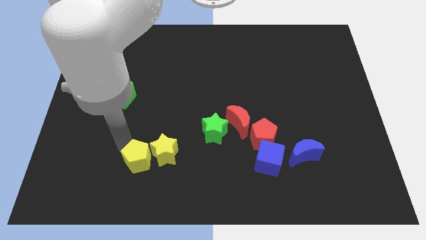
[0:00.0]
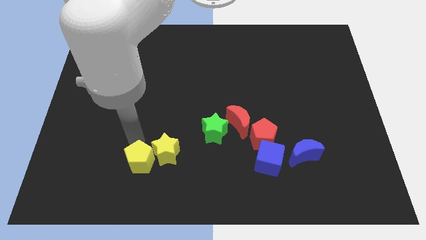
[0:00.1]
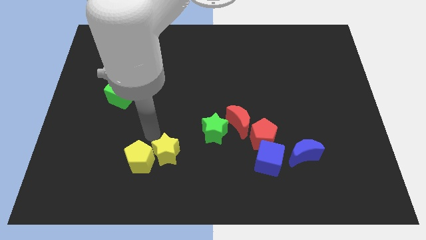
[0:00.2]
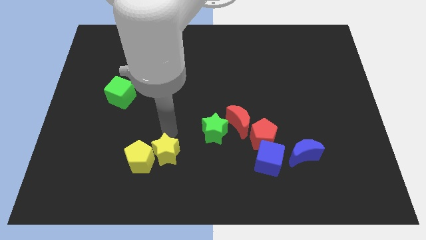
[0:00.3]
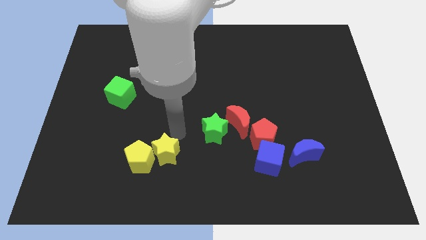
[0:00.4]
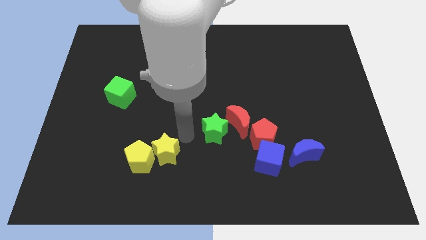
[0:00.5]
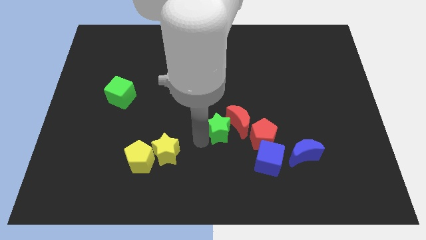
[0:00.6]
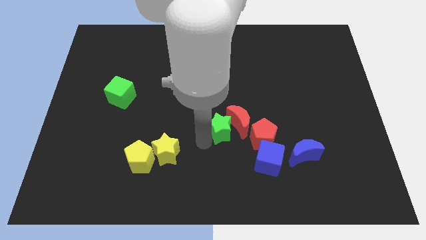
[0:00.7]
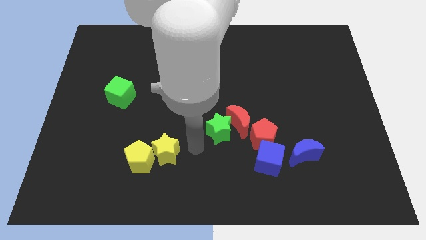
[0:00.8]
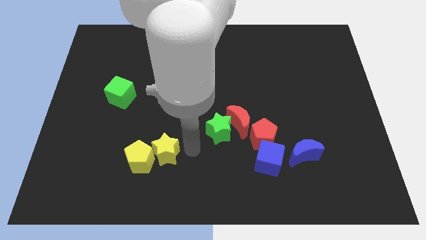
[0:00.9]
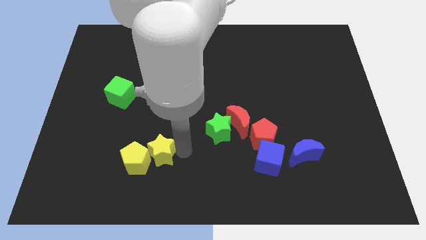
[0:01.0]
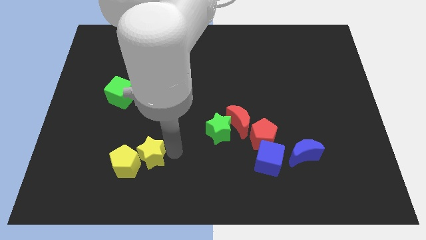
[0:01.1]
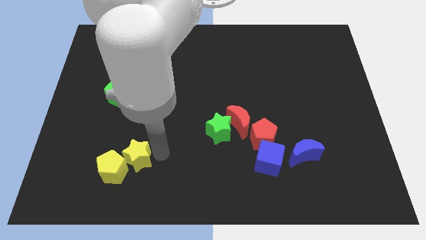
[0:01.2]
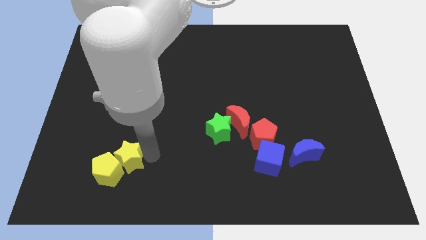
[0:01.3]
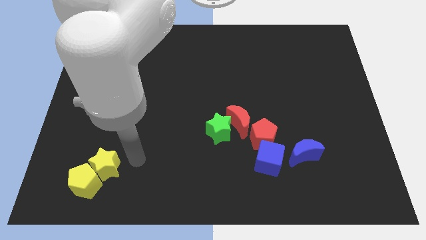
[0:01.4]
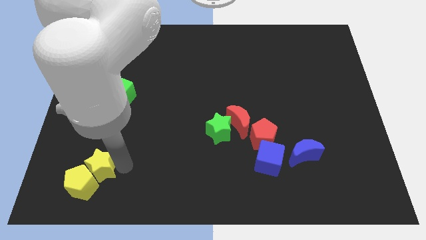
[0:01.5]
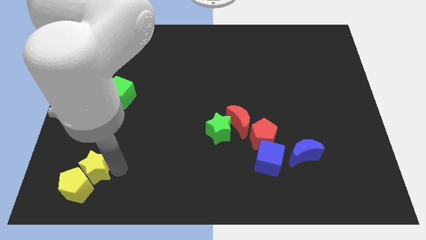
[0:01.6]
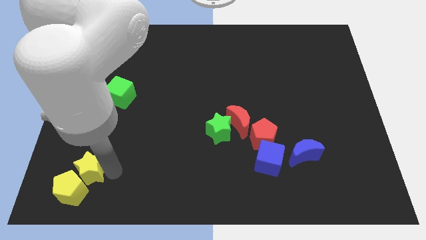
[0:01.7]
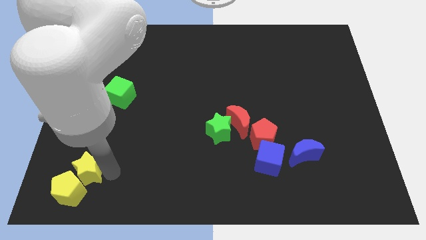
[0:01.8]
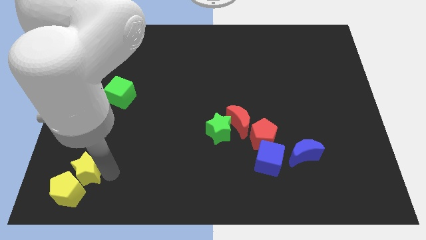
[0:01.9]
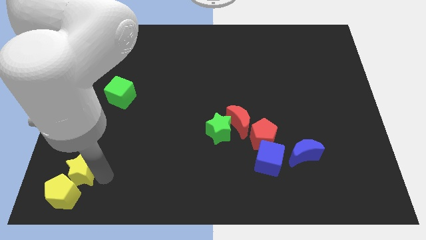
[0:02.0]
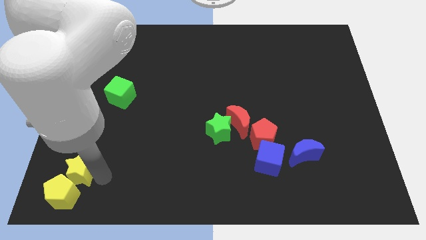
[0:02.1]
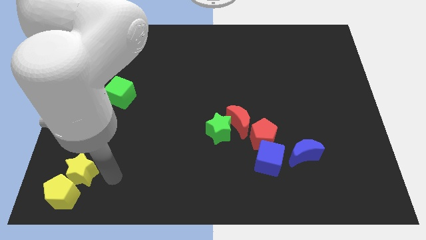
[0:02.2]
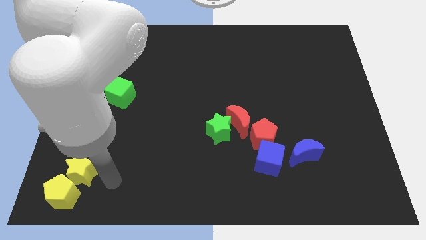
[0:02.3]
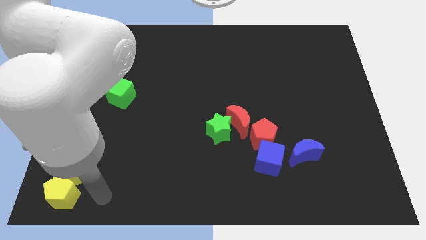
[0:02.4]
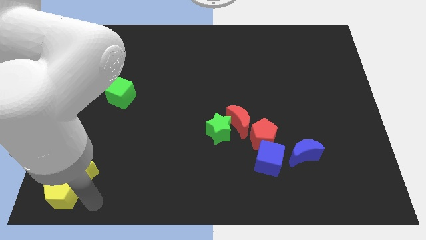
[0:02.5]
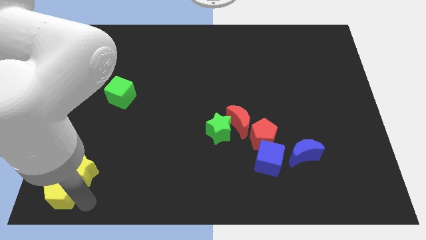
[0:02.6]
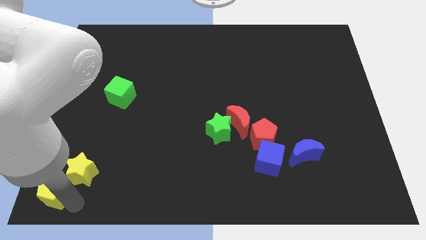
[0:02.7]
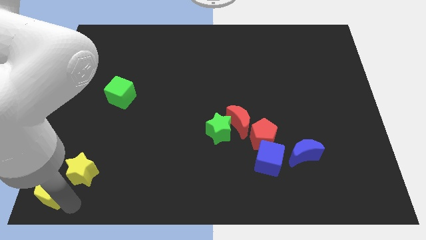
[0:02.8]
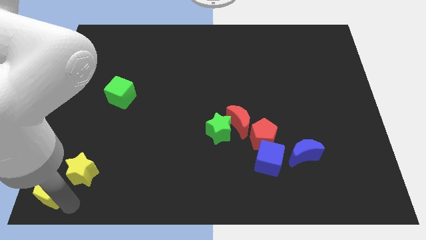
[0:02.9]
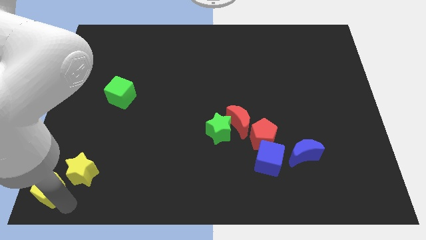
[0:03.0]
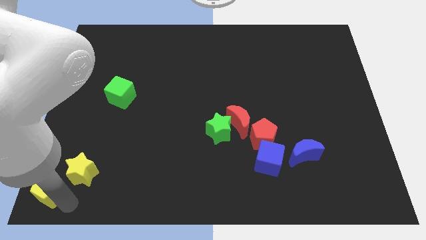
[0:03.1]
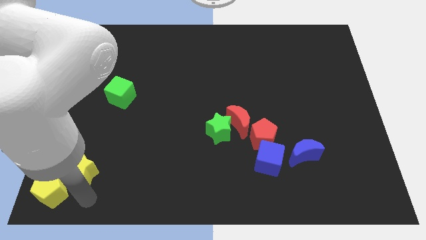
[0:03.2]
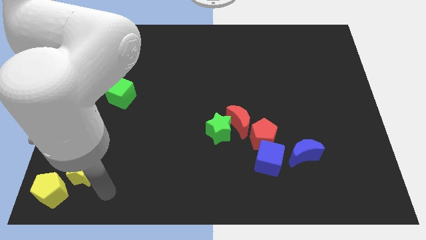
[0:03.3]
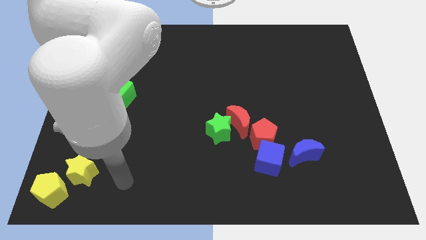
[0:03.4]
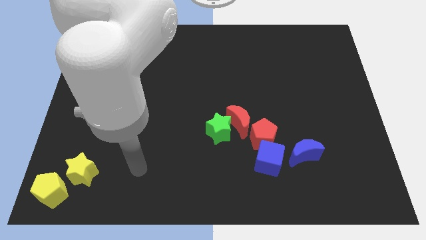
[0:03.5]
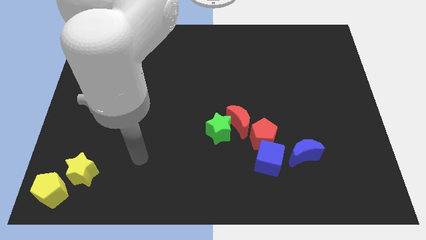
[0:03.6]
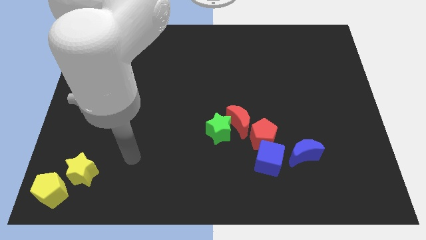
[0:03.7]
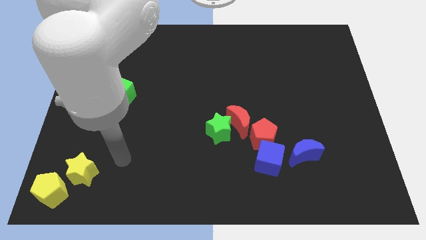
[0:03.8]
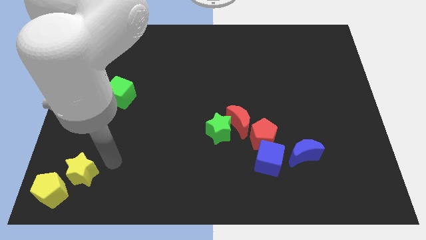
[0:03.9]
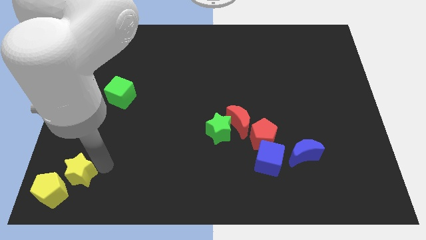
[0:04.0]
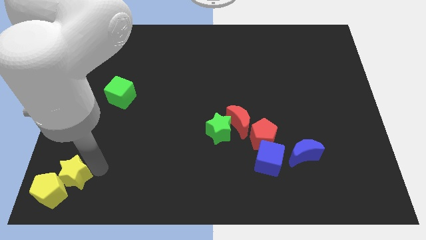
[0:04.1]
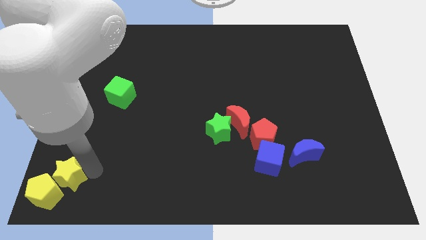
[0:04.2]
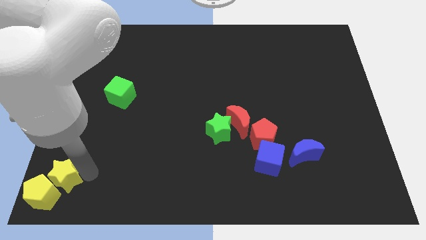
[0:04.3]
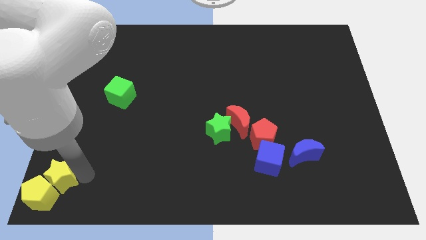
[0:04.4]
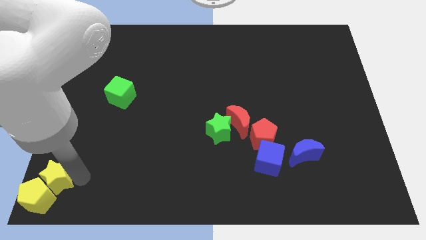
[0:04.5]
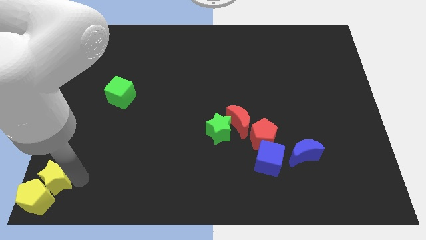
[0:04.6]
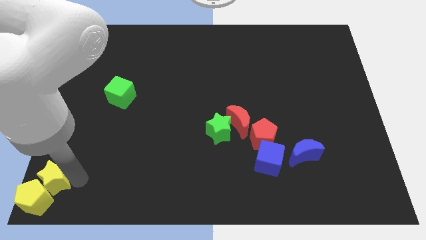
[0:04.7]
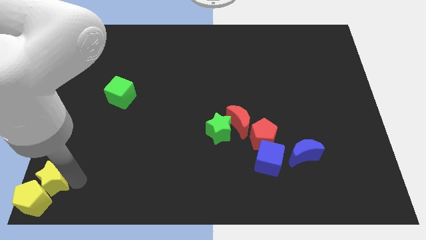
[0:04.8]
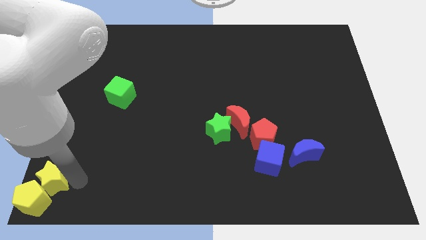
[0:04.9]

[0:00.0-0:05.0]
push the yellow blocks to the bottom left corner of the board

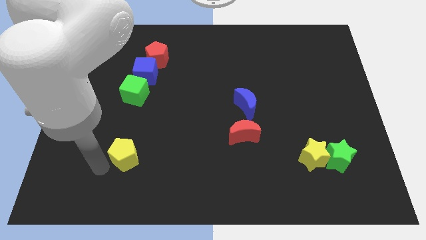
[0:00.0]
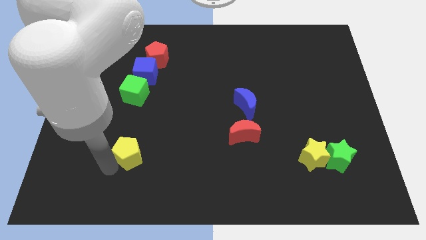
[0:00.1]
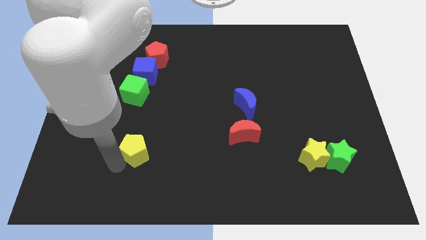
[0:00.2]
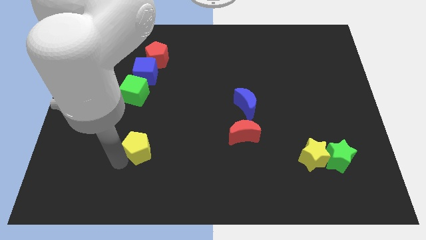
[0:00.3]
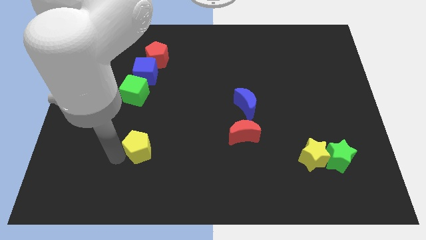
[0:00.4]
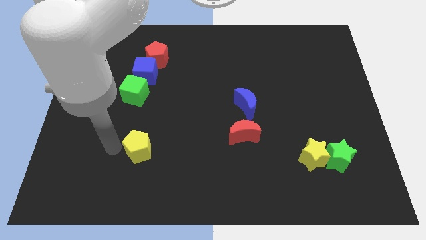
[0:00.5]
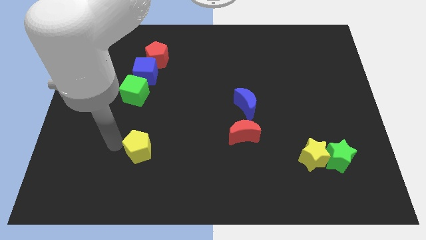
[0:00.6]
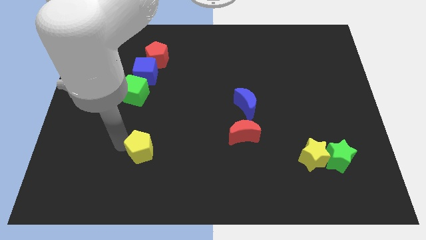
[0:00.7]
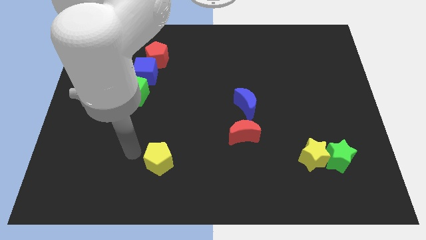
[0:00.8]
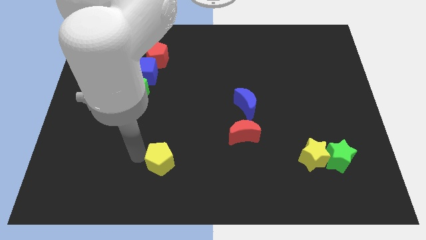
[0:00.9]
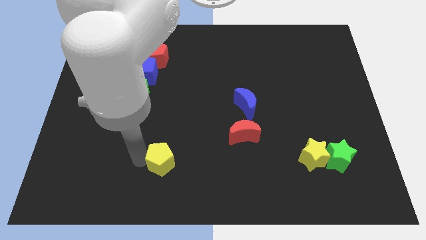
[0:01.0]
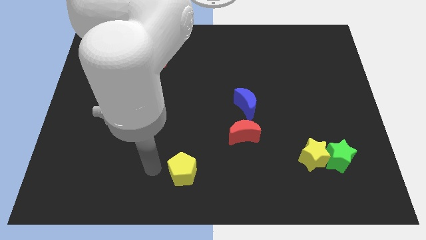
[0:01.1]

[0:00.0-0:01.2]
move the yellow pentagon towards the bottom center of the board

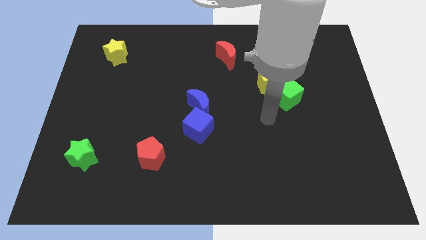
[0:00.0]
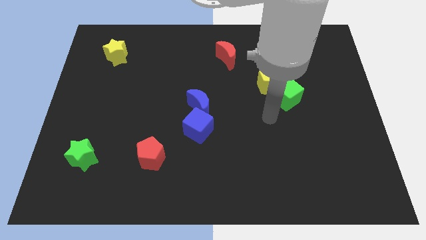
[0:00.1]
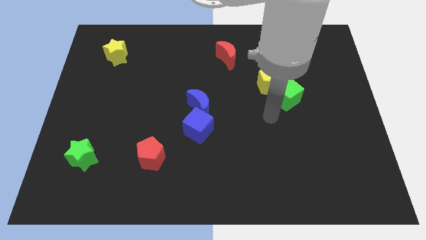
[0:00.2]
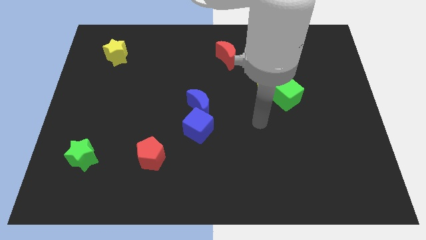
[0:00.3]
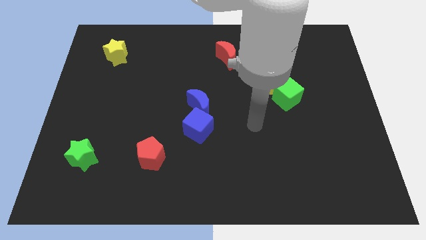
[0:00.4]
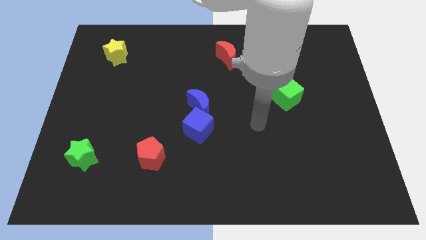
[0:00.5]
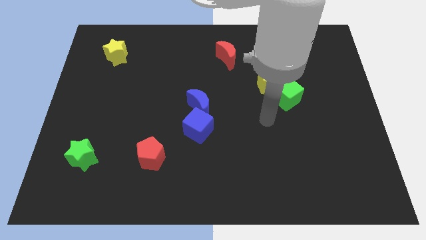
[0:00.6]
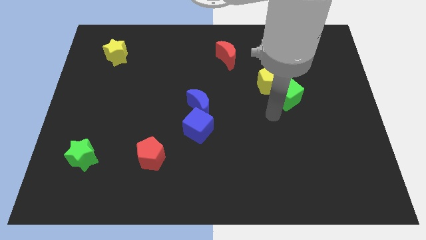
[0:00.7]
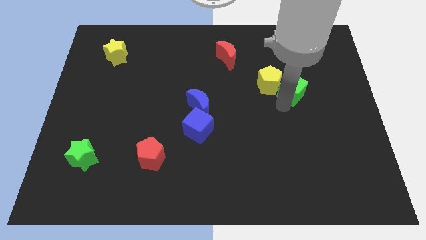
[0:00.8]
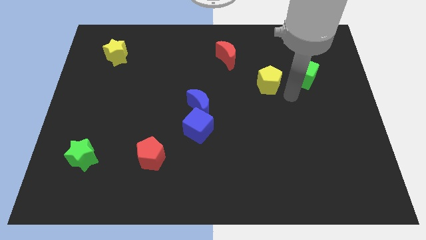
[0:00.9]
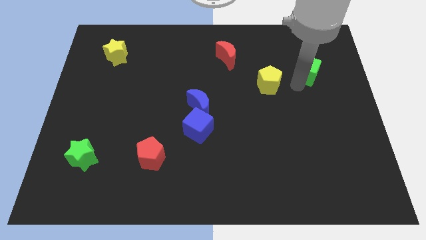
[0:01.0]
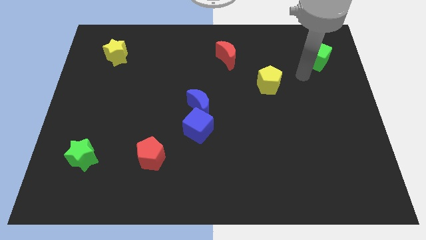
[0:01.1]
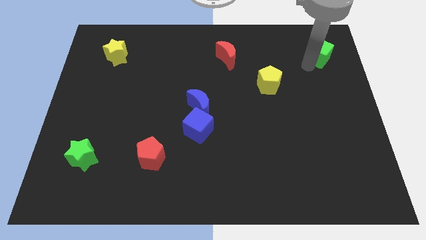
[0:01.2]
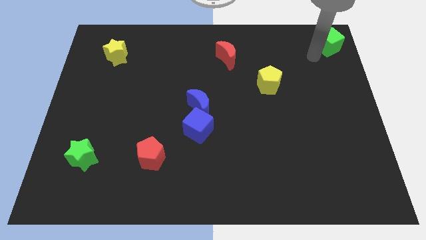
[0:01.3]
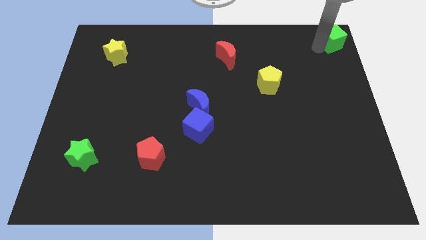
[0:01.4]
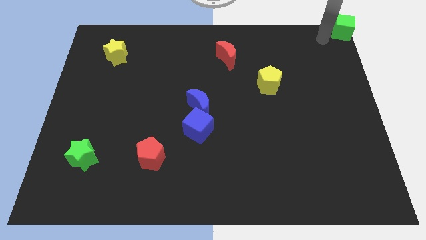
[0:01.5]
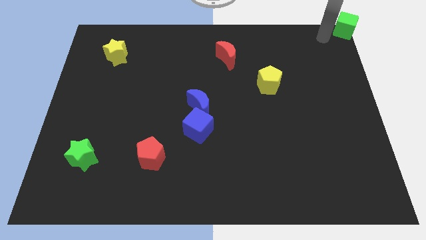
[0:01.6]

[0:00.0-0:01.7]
push the green cube to the top right corner of the board

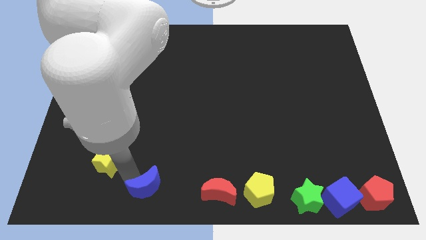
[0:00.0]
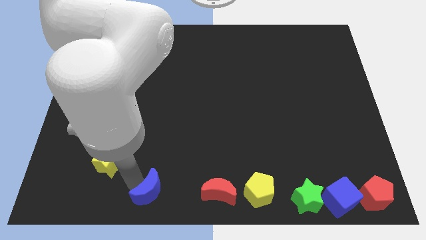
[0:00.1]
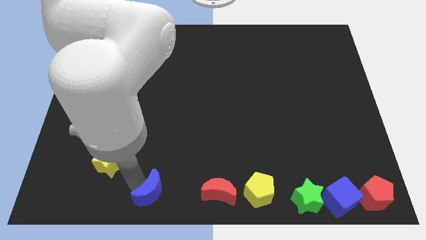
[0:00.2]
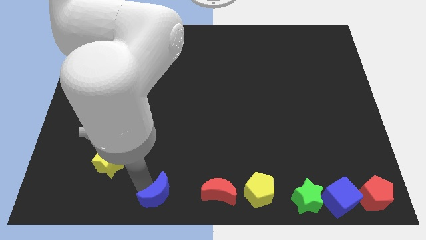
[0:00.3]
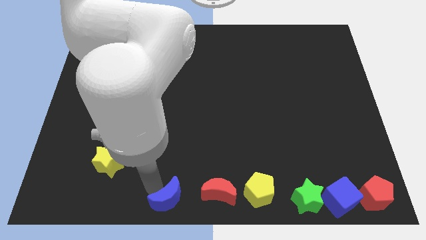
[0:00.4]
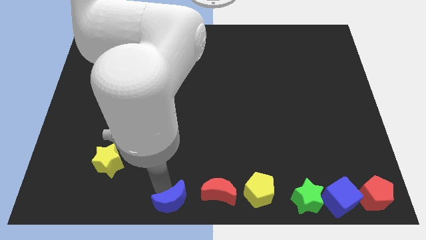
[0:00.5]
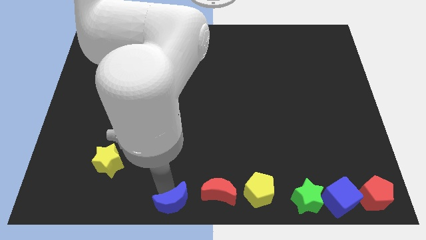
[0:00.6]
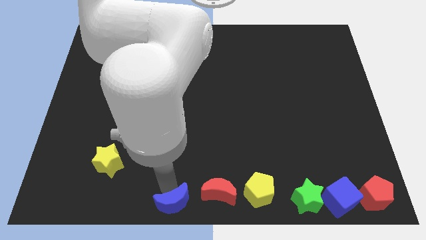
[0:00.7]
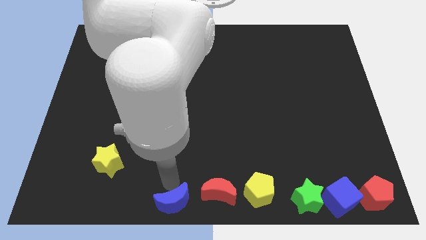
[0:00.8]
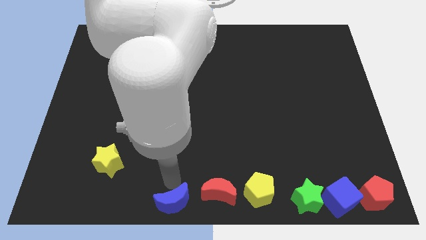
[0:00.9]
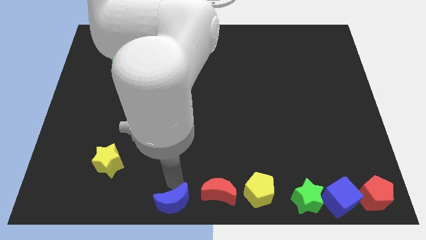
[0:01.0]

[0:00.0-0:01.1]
slide the blue moon to the left side of the red moon
